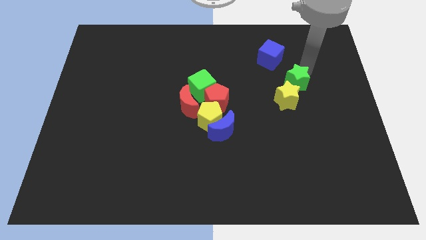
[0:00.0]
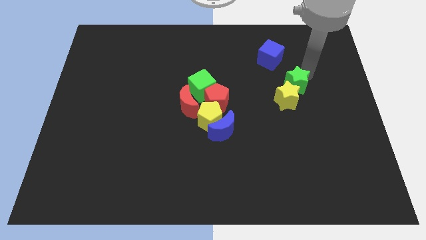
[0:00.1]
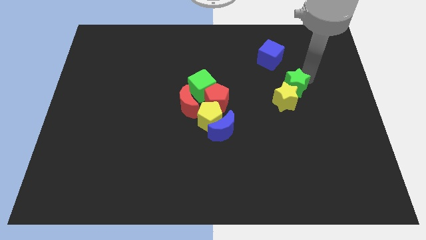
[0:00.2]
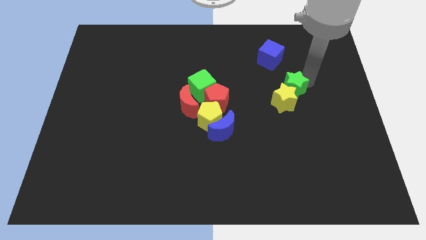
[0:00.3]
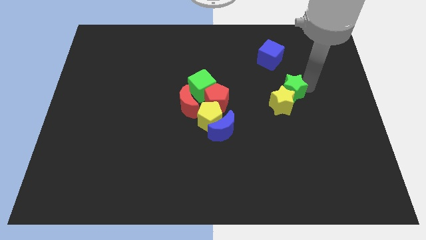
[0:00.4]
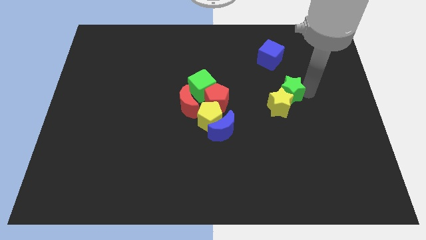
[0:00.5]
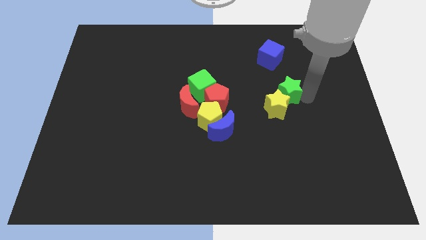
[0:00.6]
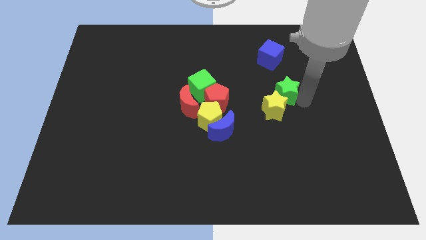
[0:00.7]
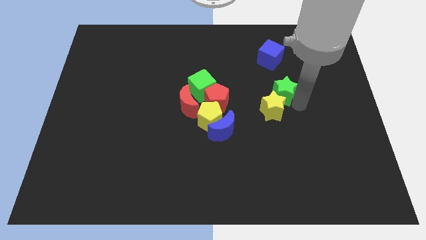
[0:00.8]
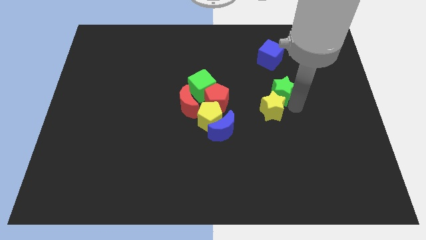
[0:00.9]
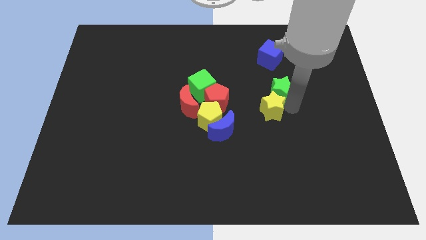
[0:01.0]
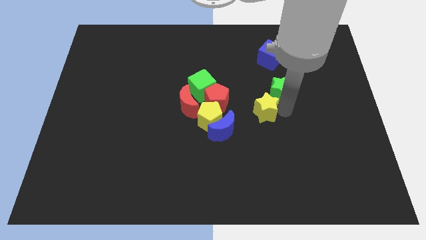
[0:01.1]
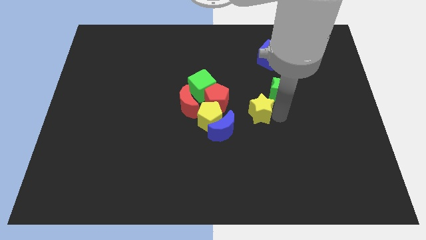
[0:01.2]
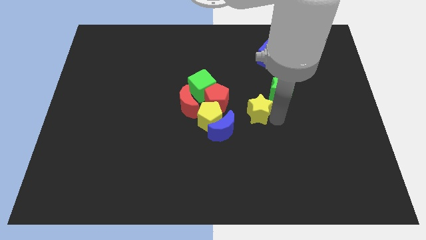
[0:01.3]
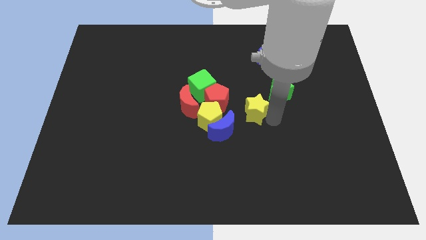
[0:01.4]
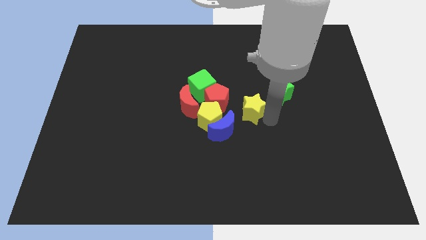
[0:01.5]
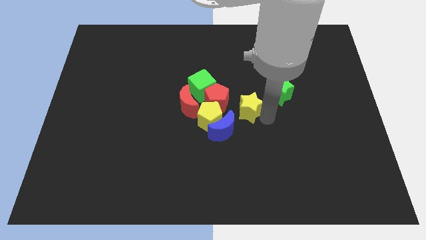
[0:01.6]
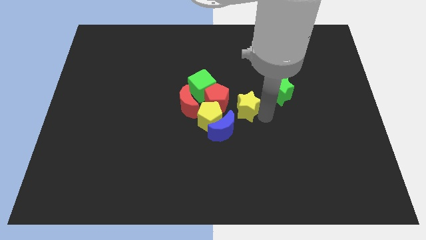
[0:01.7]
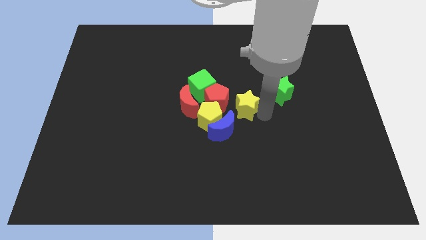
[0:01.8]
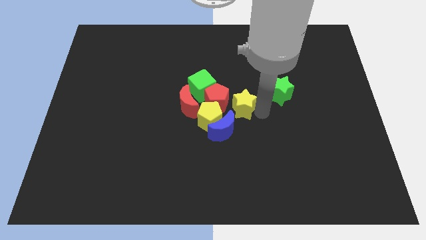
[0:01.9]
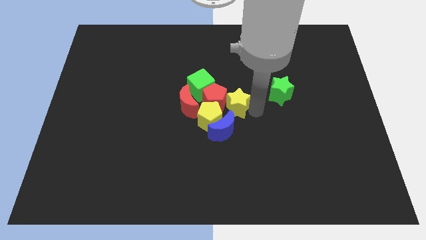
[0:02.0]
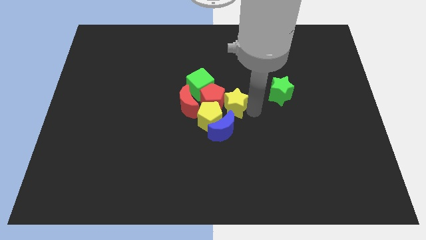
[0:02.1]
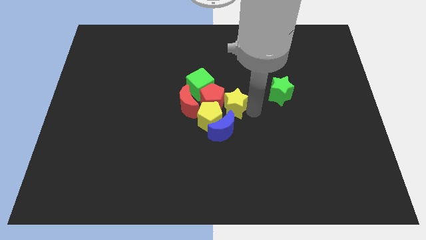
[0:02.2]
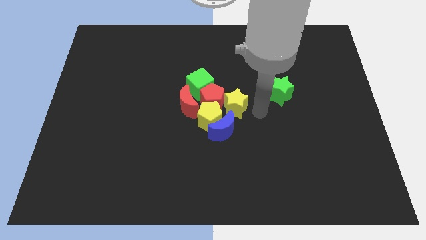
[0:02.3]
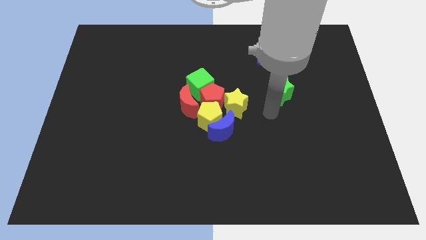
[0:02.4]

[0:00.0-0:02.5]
push the yellow star into red pentagon

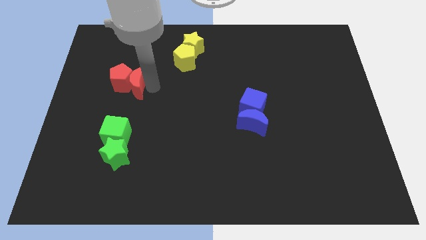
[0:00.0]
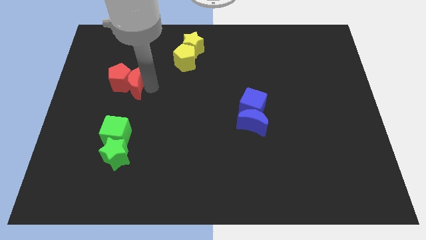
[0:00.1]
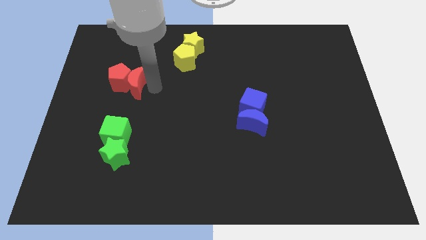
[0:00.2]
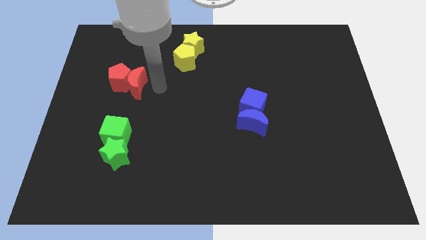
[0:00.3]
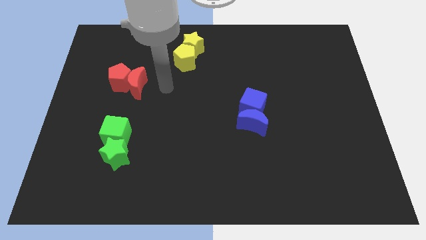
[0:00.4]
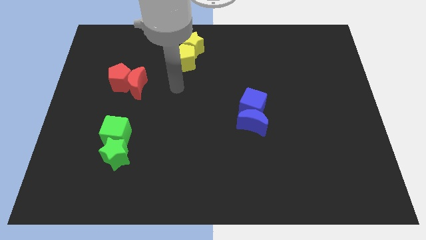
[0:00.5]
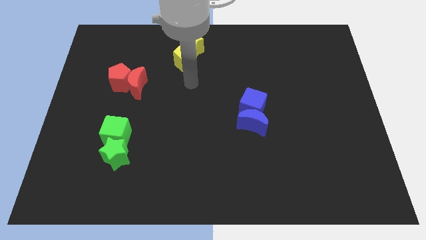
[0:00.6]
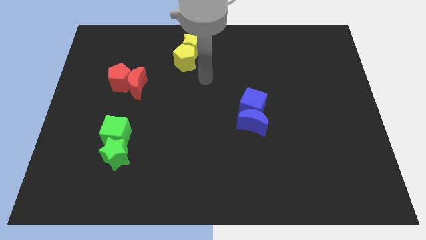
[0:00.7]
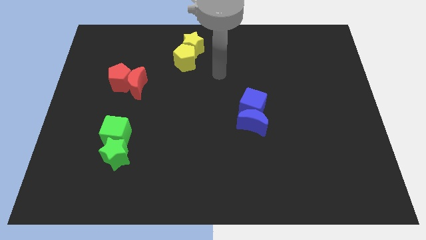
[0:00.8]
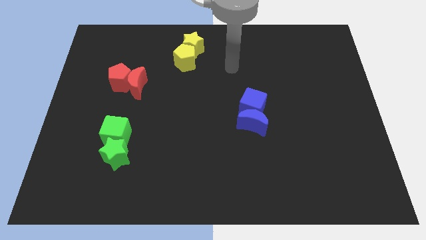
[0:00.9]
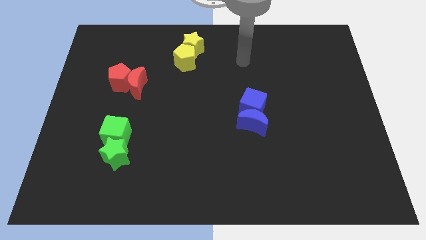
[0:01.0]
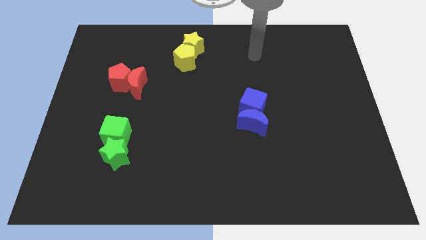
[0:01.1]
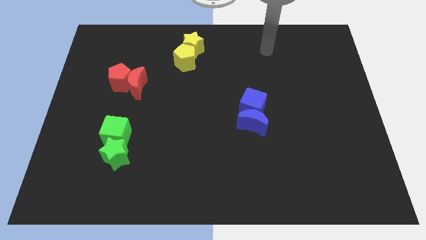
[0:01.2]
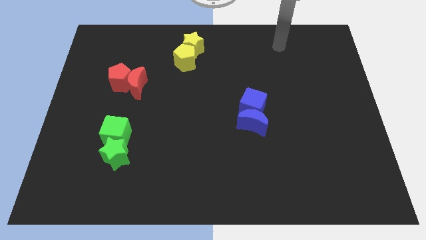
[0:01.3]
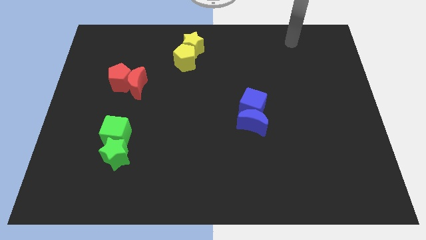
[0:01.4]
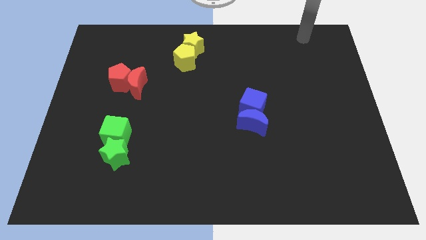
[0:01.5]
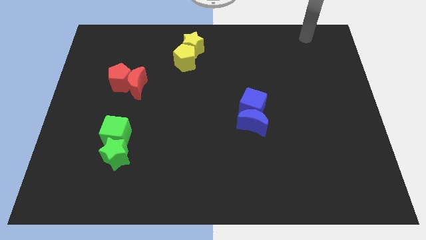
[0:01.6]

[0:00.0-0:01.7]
move your arm away from the red moon

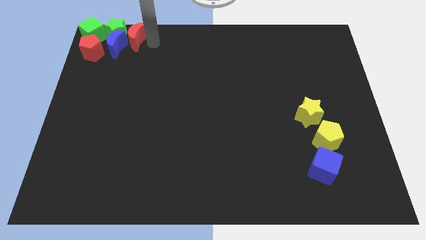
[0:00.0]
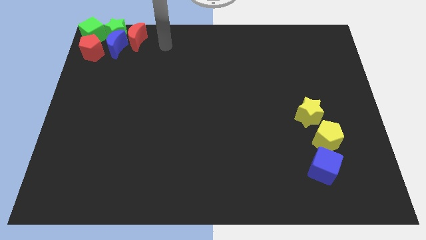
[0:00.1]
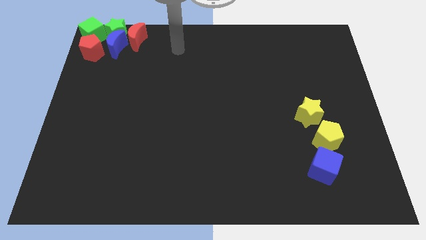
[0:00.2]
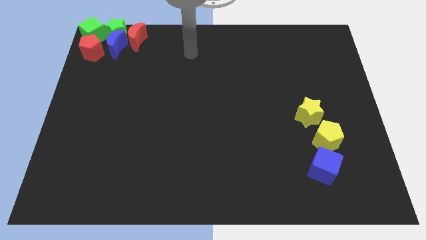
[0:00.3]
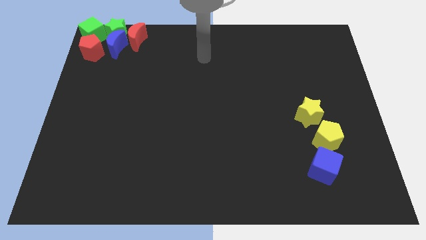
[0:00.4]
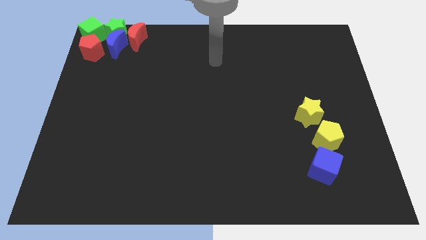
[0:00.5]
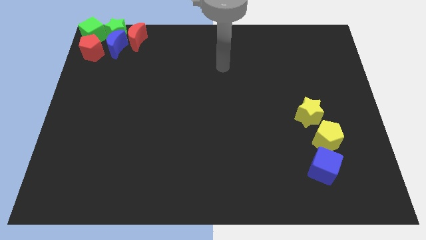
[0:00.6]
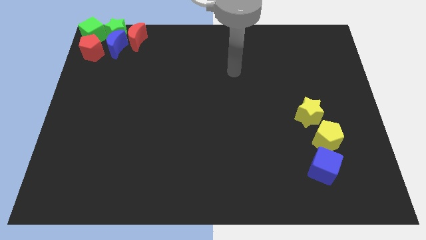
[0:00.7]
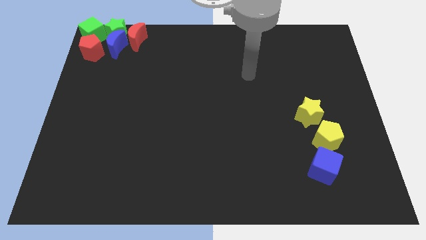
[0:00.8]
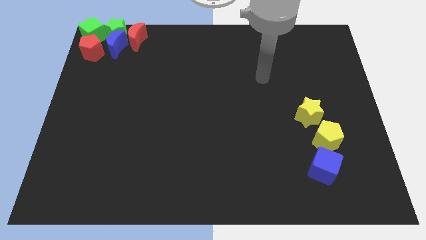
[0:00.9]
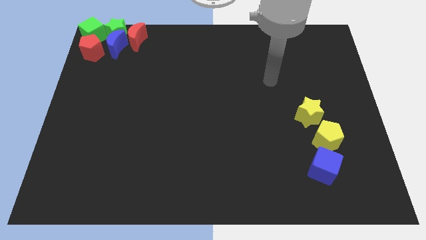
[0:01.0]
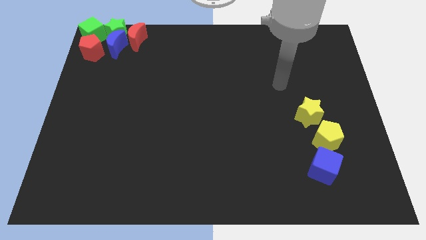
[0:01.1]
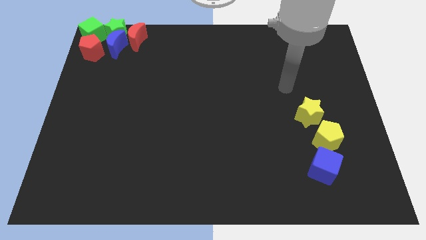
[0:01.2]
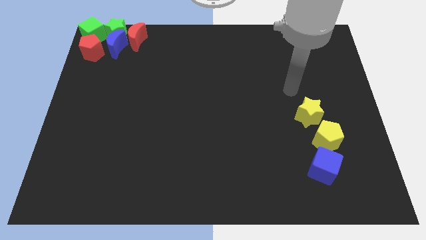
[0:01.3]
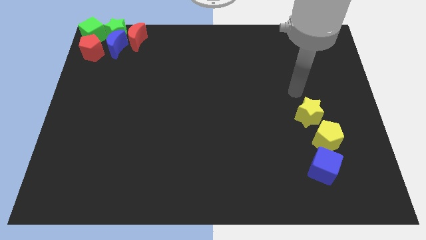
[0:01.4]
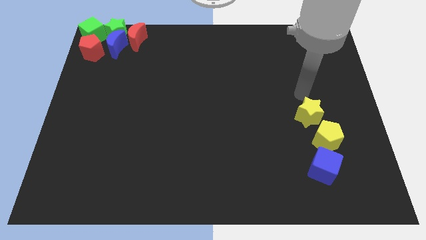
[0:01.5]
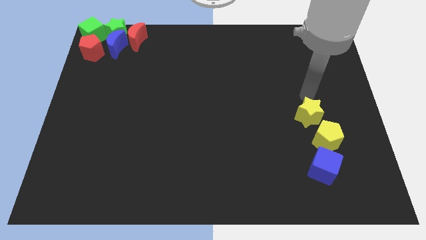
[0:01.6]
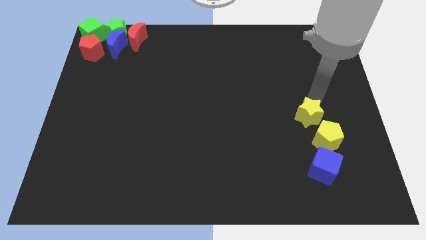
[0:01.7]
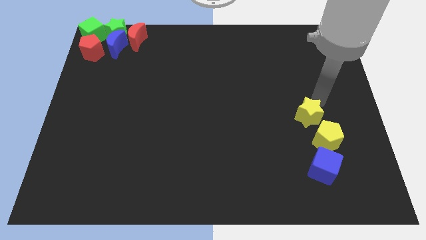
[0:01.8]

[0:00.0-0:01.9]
move your arm closer to the yellow star

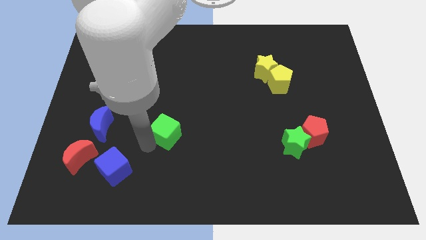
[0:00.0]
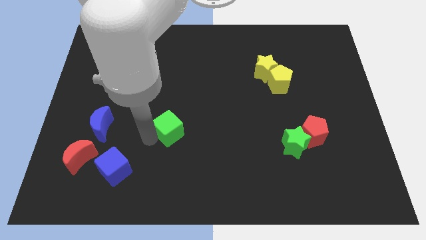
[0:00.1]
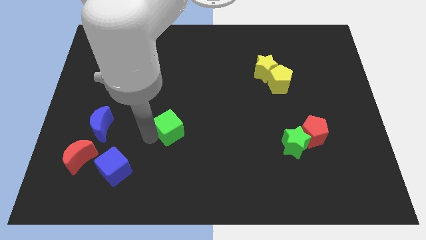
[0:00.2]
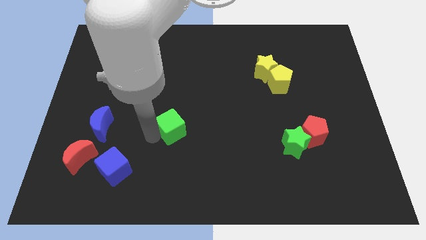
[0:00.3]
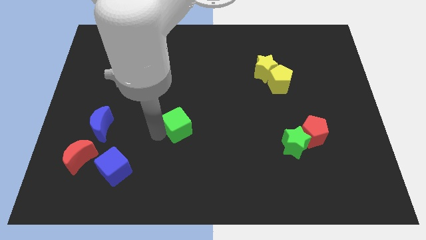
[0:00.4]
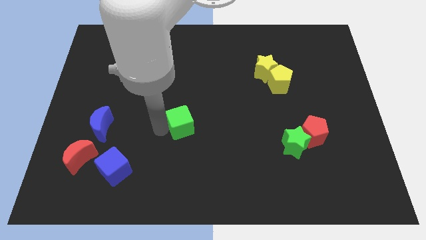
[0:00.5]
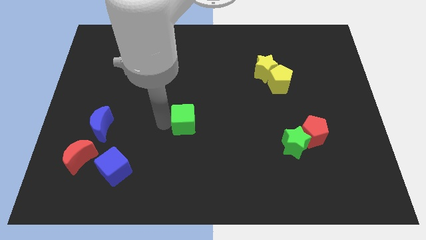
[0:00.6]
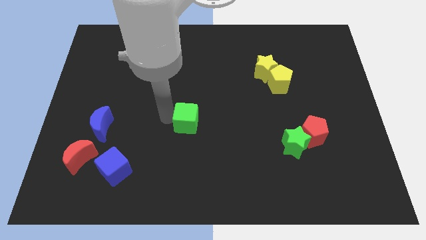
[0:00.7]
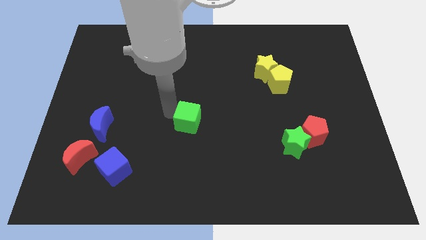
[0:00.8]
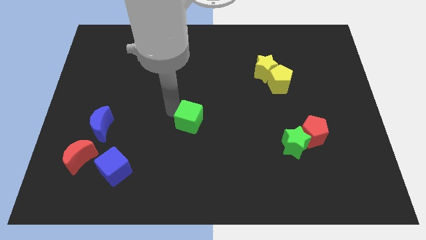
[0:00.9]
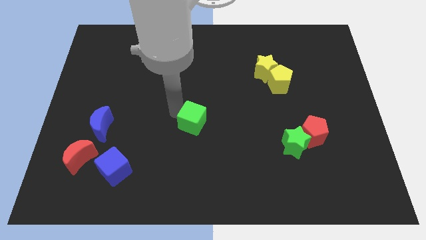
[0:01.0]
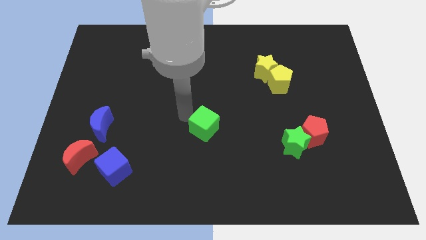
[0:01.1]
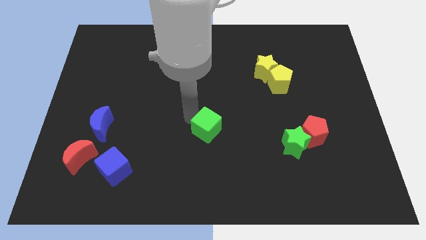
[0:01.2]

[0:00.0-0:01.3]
push the green cube to the center

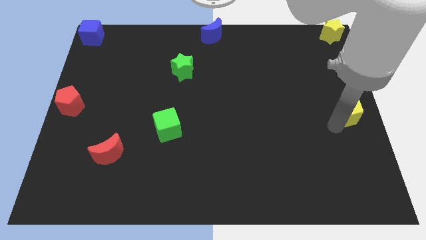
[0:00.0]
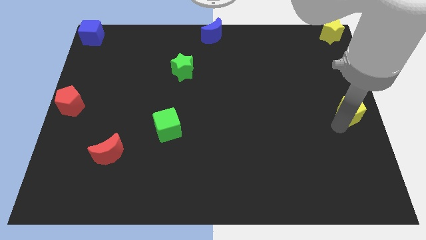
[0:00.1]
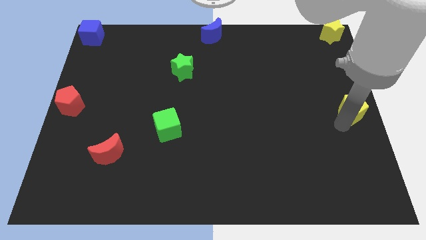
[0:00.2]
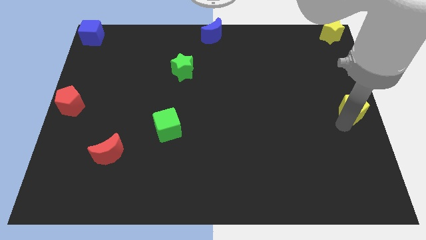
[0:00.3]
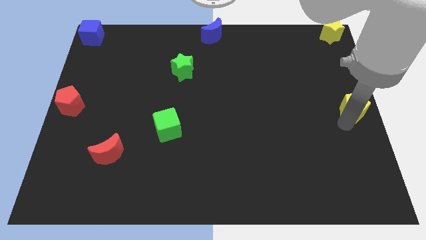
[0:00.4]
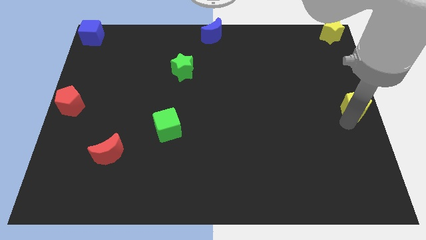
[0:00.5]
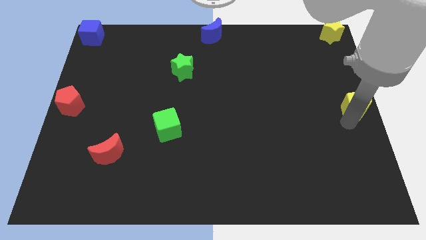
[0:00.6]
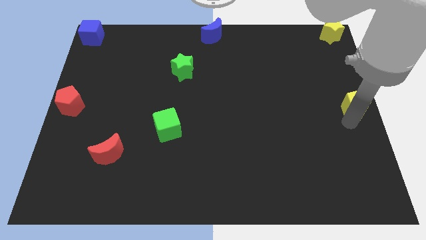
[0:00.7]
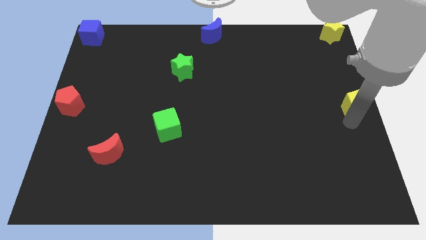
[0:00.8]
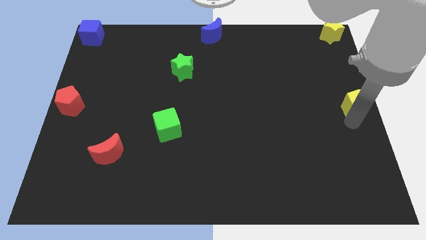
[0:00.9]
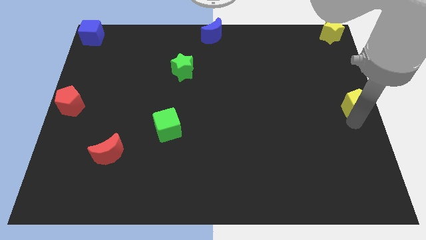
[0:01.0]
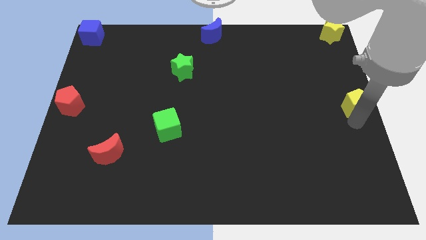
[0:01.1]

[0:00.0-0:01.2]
place the yellow pentagon towards the right center of the board

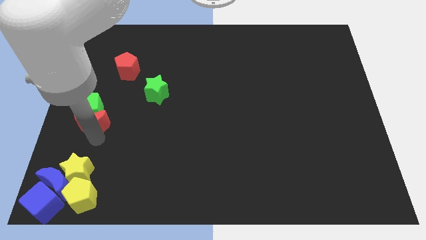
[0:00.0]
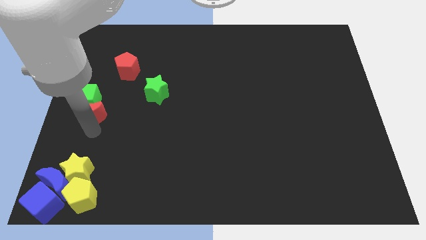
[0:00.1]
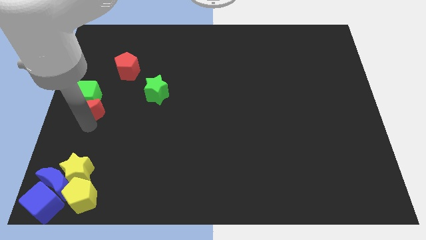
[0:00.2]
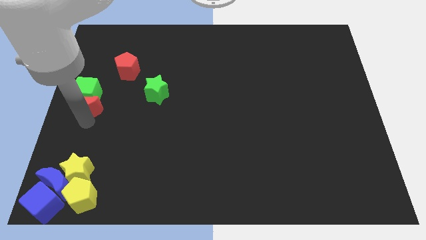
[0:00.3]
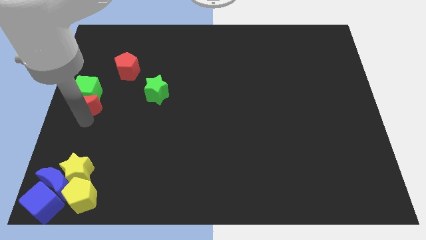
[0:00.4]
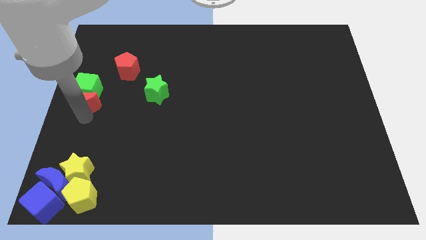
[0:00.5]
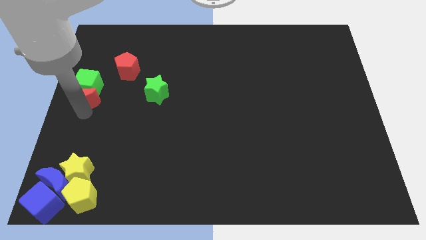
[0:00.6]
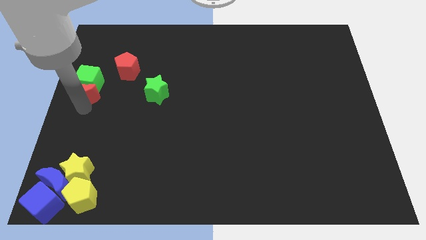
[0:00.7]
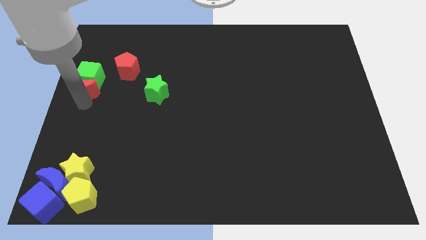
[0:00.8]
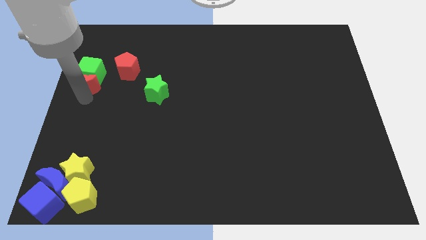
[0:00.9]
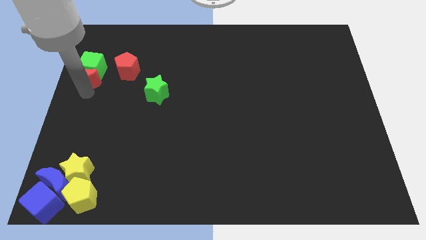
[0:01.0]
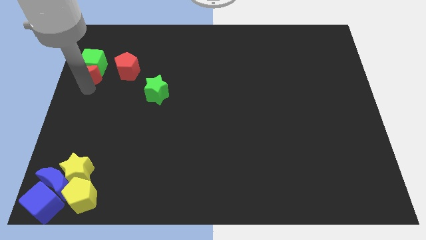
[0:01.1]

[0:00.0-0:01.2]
push the red crescent and green cube upwards of the board
